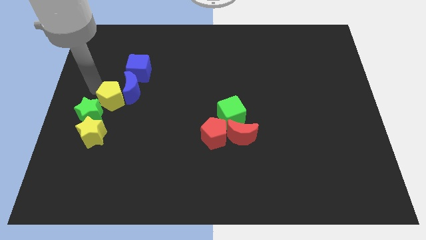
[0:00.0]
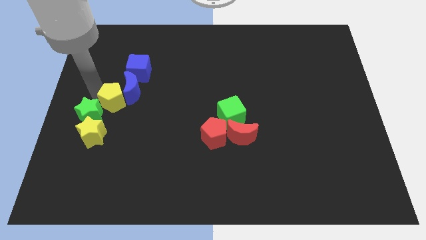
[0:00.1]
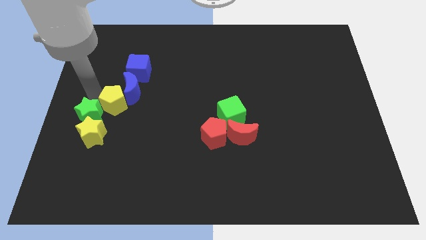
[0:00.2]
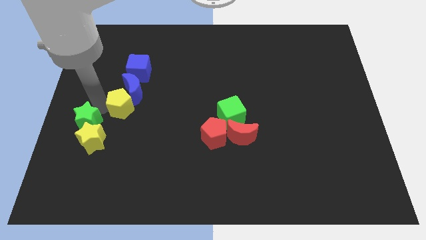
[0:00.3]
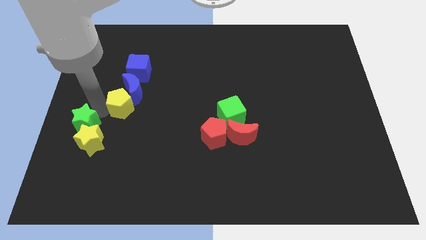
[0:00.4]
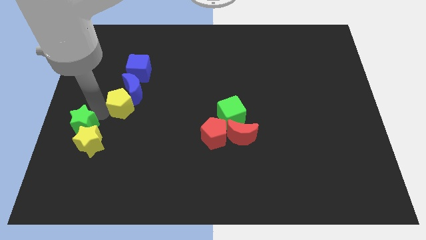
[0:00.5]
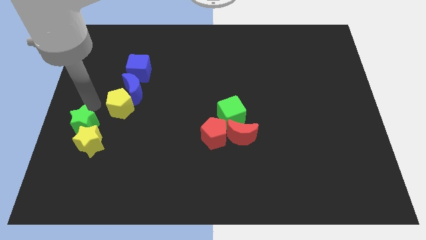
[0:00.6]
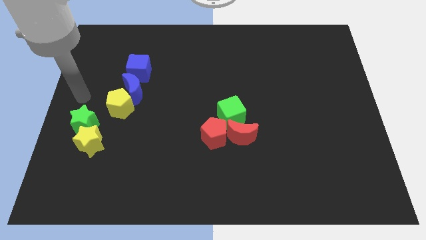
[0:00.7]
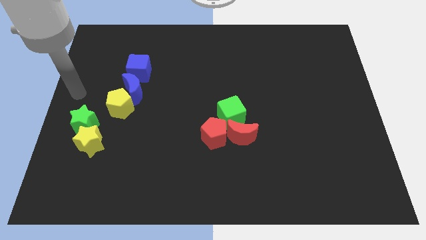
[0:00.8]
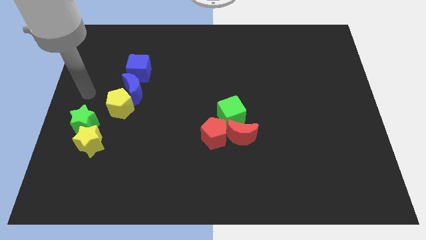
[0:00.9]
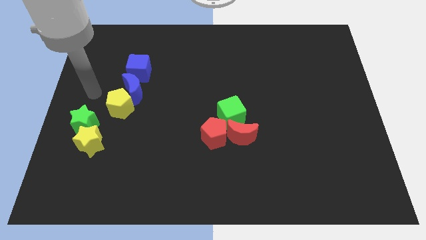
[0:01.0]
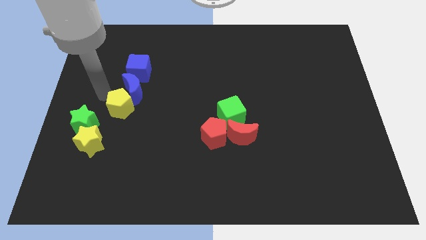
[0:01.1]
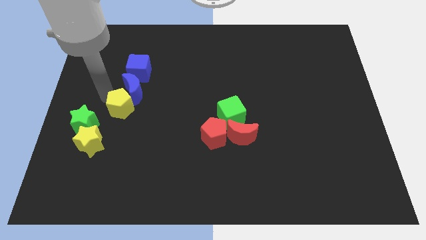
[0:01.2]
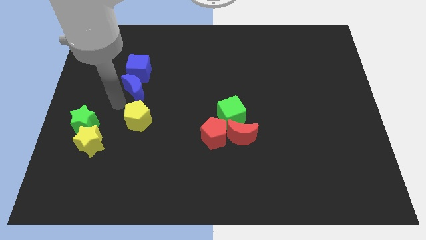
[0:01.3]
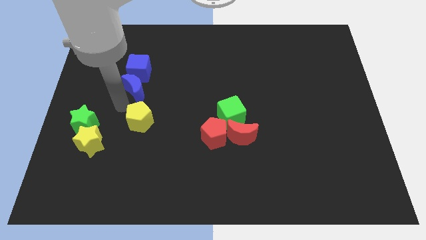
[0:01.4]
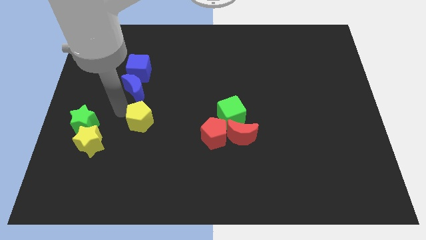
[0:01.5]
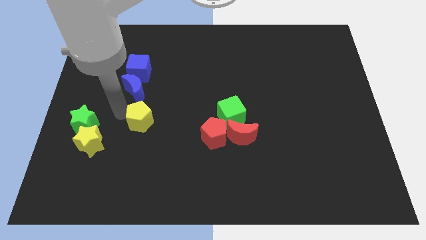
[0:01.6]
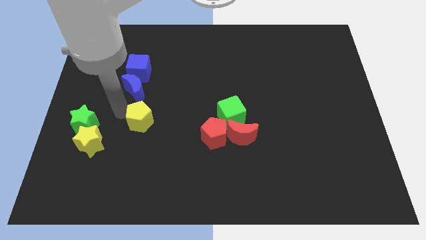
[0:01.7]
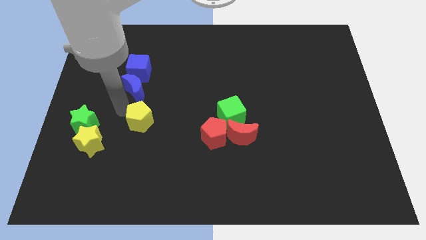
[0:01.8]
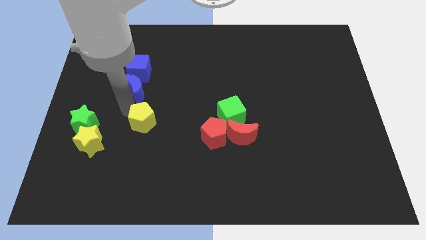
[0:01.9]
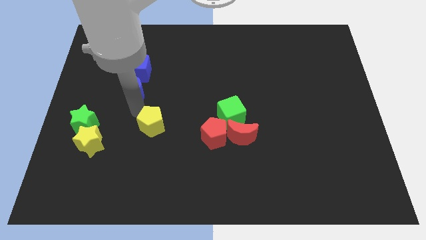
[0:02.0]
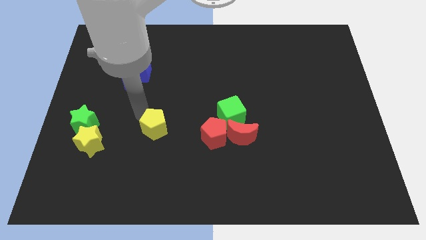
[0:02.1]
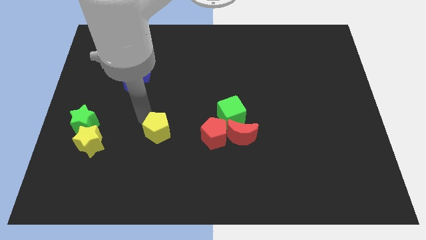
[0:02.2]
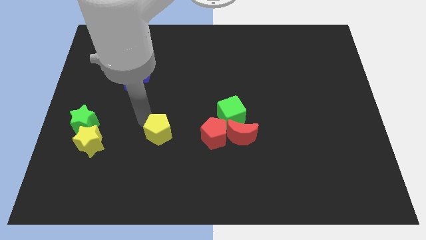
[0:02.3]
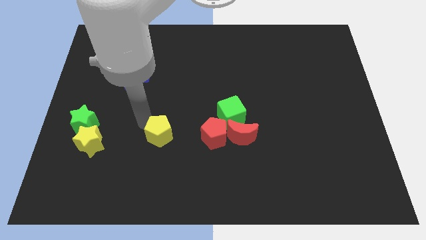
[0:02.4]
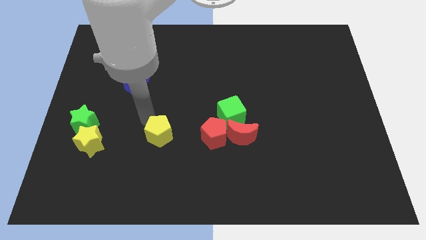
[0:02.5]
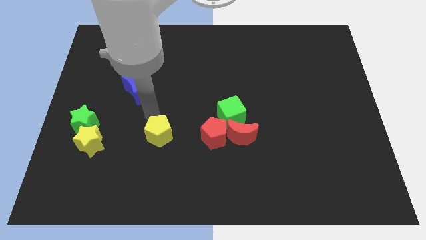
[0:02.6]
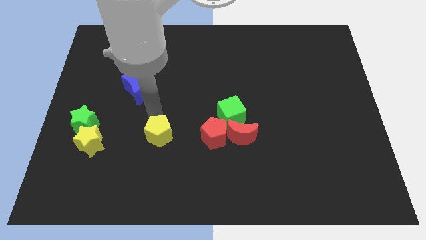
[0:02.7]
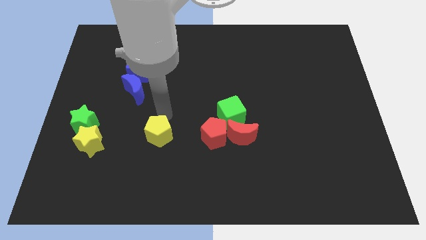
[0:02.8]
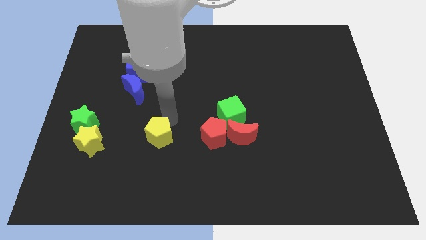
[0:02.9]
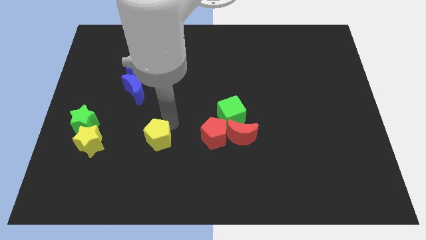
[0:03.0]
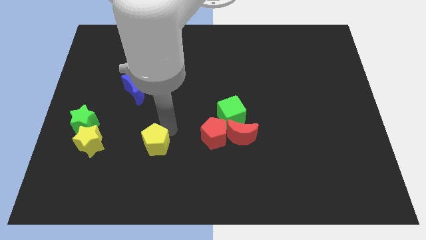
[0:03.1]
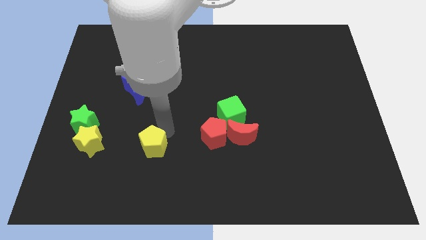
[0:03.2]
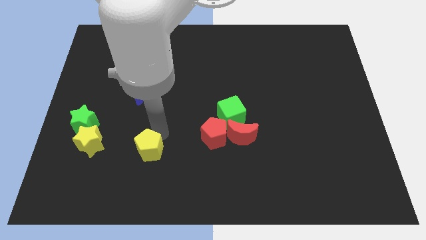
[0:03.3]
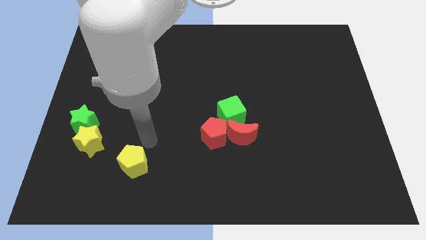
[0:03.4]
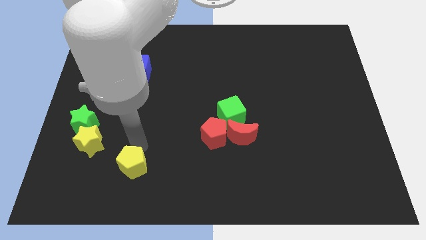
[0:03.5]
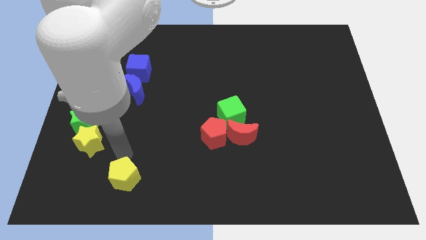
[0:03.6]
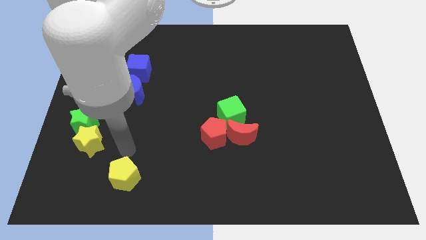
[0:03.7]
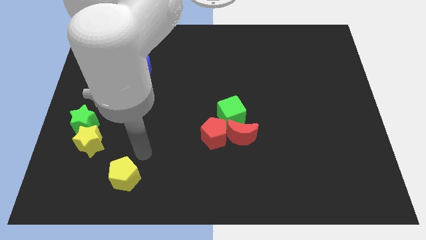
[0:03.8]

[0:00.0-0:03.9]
push the yellow pentagon to the bottom left side of the board

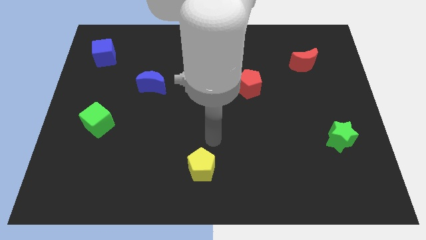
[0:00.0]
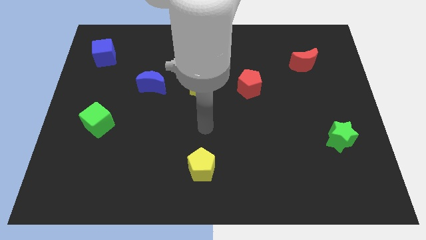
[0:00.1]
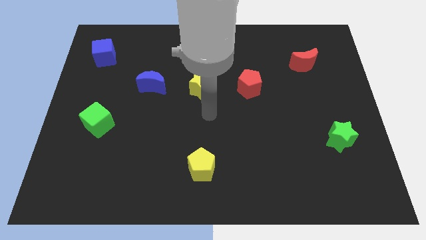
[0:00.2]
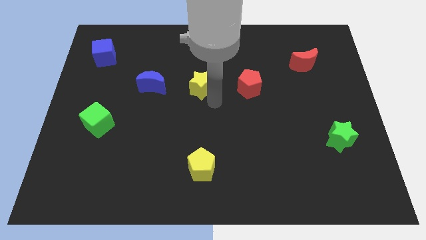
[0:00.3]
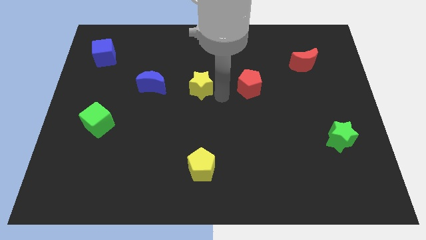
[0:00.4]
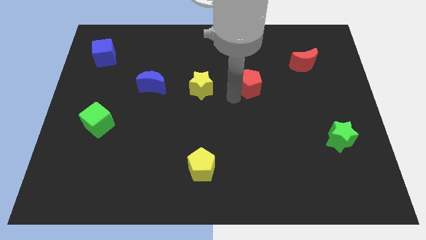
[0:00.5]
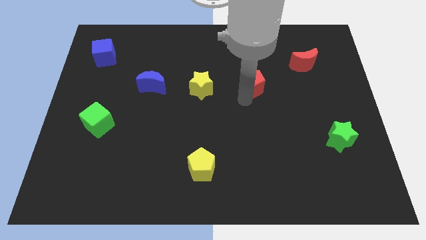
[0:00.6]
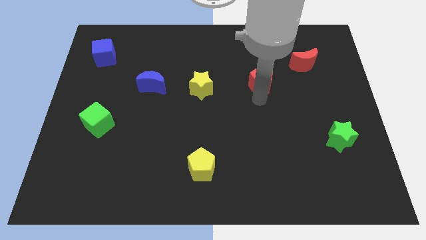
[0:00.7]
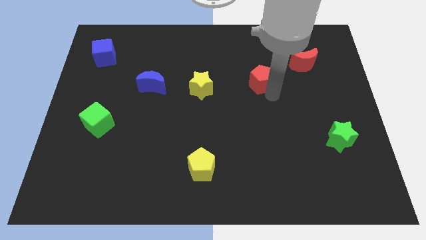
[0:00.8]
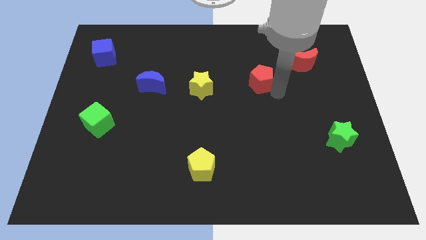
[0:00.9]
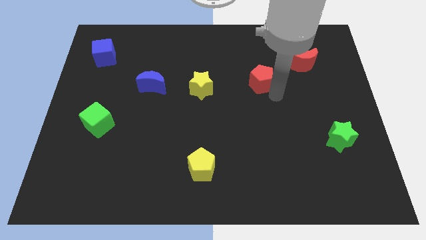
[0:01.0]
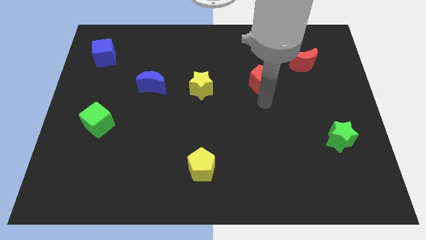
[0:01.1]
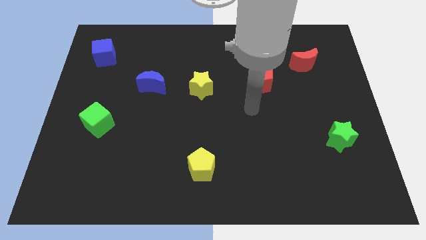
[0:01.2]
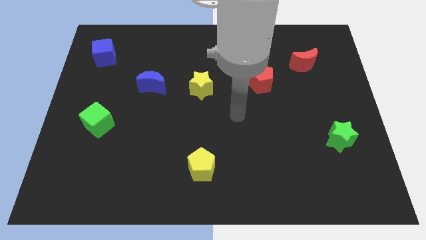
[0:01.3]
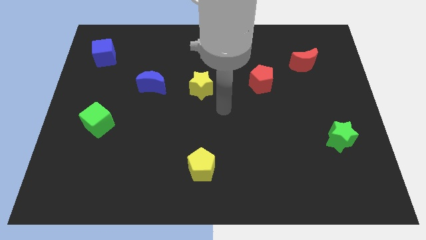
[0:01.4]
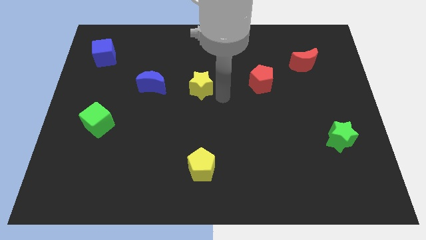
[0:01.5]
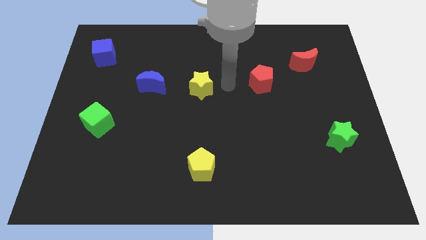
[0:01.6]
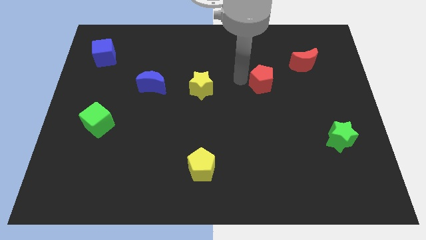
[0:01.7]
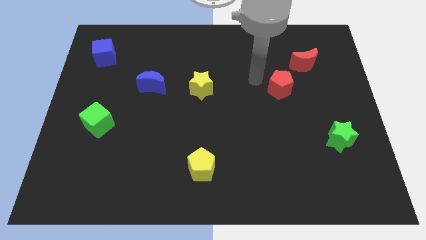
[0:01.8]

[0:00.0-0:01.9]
push red pentagon to the red crescent

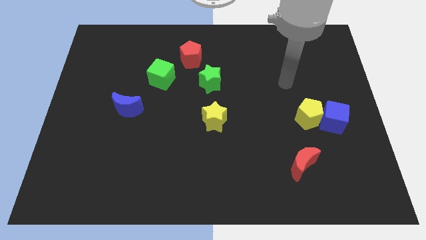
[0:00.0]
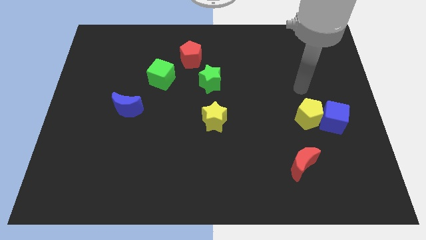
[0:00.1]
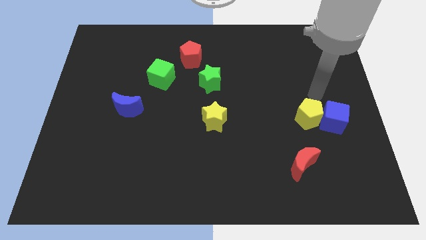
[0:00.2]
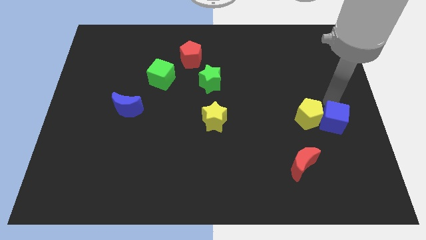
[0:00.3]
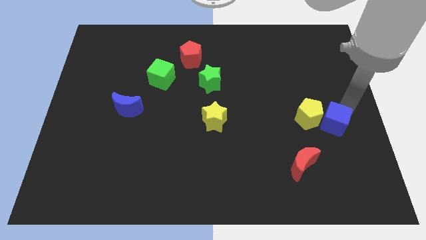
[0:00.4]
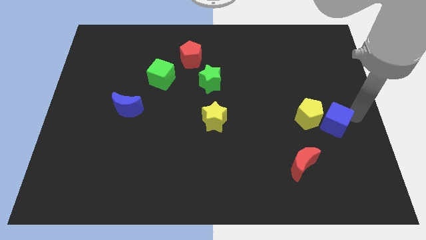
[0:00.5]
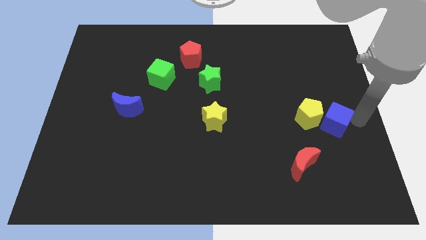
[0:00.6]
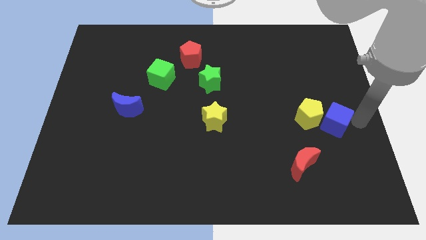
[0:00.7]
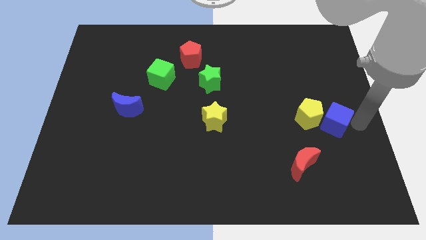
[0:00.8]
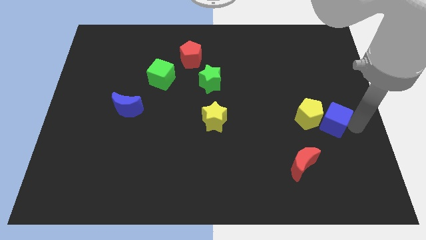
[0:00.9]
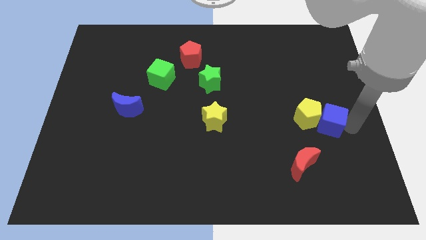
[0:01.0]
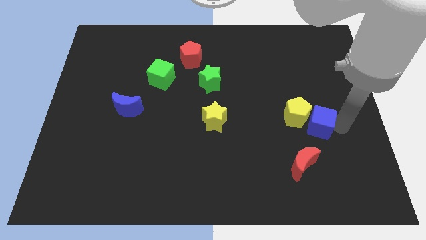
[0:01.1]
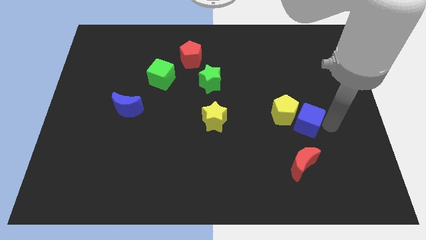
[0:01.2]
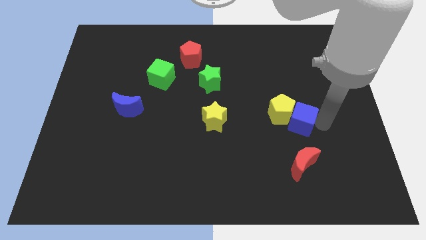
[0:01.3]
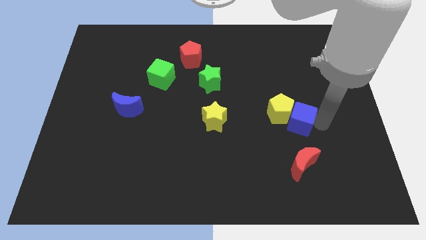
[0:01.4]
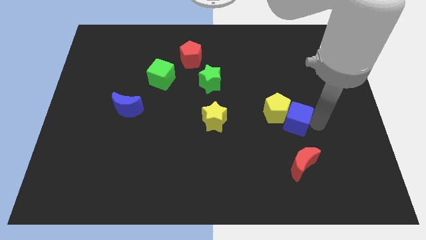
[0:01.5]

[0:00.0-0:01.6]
push the yellow pentagon and blue cube to the left

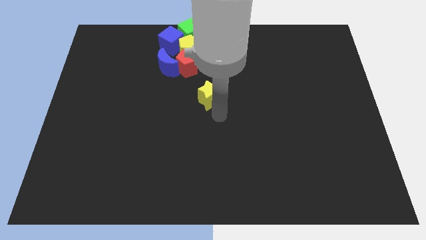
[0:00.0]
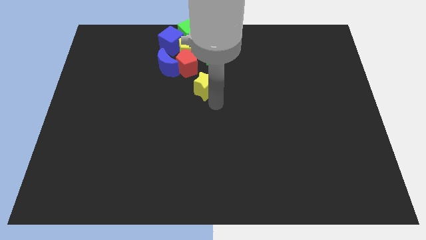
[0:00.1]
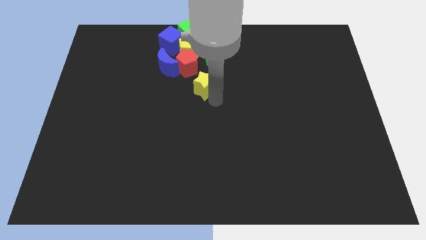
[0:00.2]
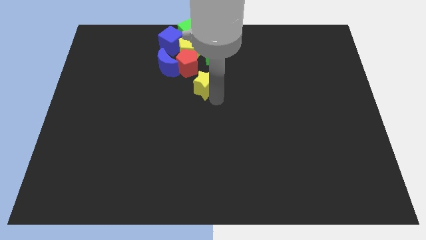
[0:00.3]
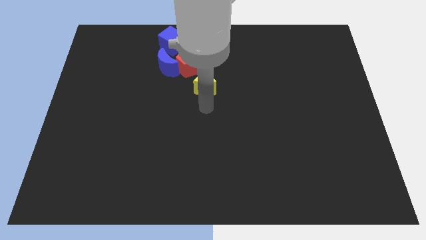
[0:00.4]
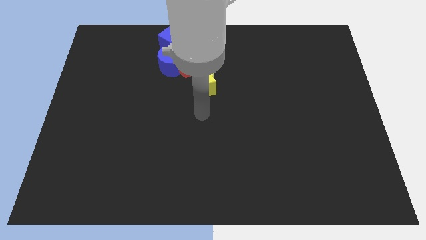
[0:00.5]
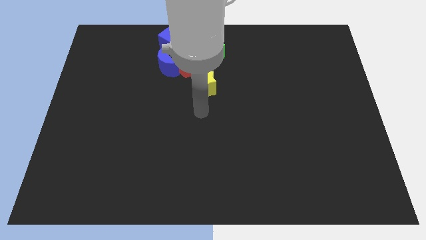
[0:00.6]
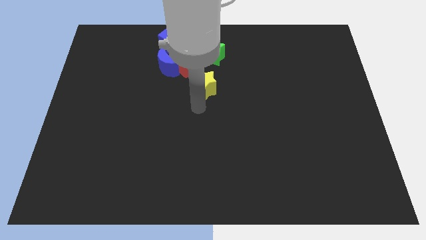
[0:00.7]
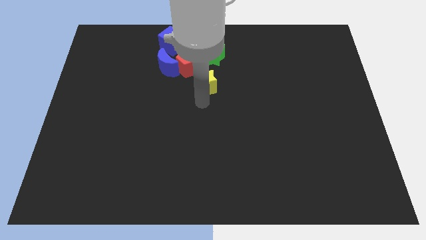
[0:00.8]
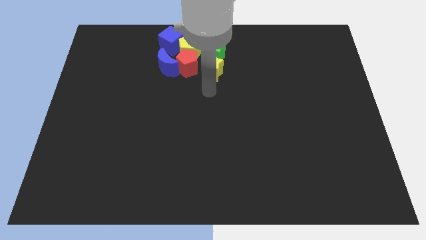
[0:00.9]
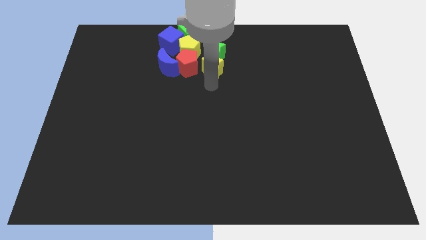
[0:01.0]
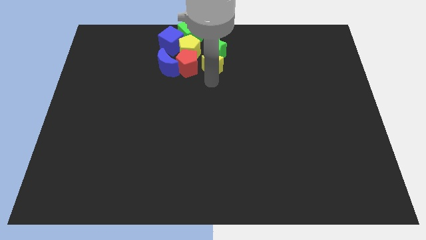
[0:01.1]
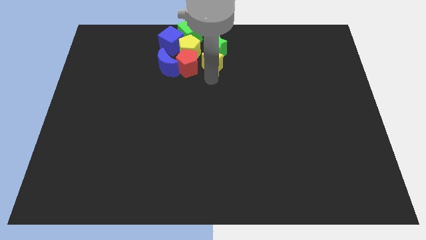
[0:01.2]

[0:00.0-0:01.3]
slide the yellow star into the bottom side of the green star

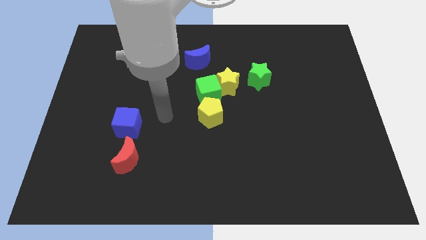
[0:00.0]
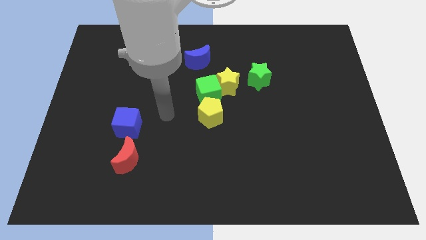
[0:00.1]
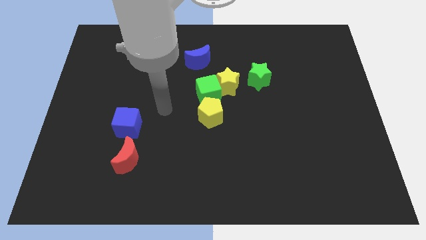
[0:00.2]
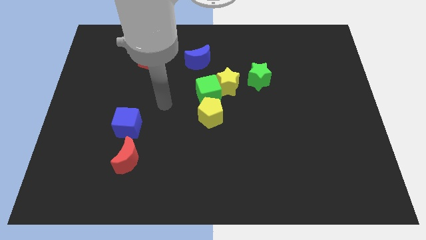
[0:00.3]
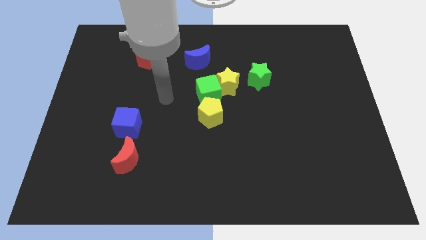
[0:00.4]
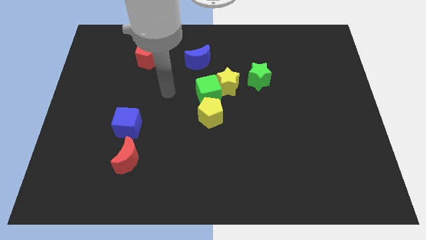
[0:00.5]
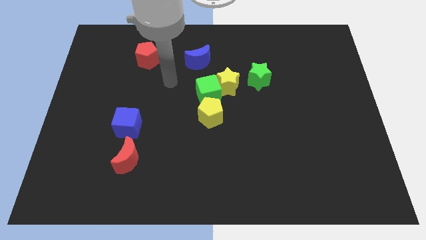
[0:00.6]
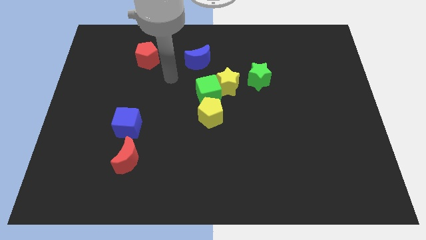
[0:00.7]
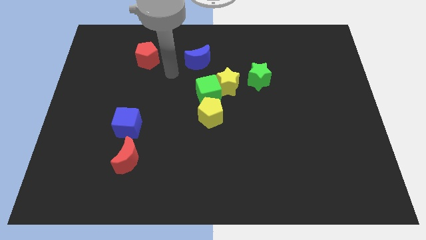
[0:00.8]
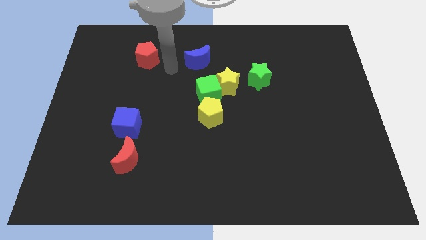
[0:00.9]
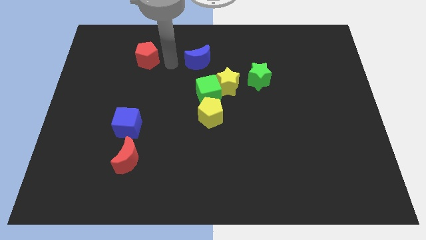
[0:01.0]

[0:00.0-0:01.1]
move your arm in between the blue moon and red pentagon
